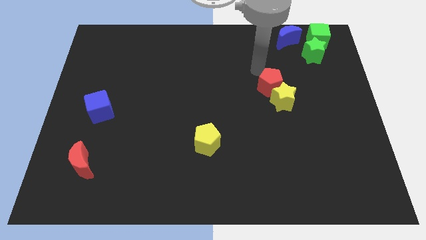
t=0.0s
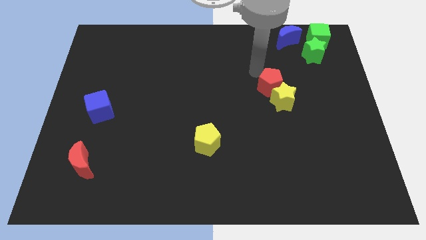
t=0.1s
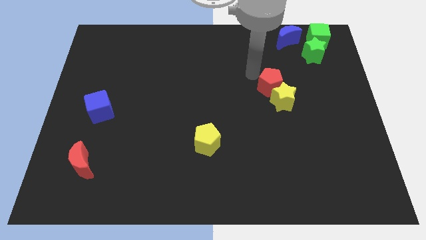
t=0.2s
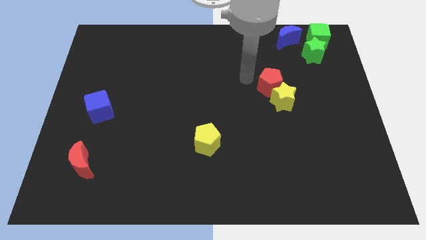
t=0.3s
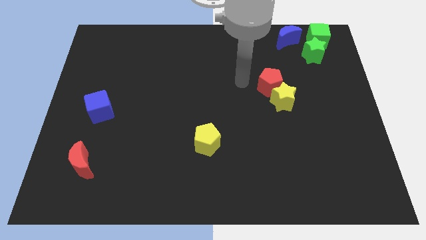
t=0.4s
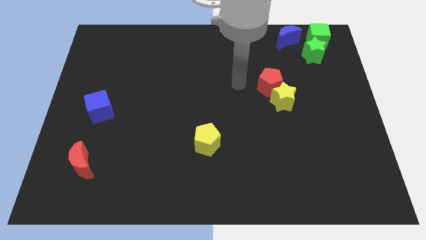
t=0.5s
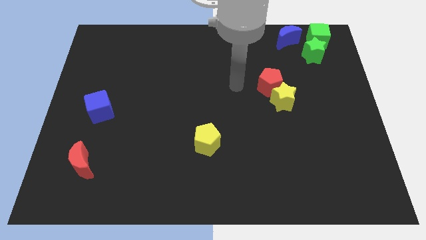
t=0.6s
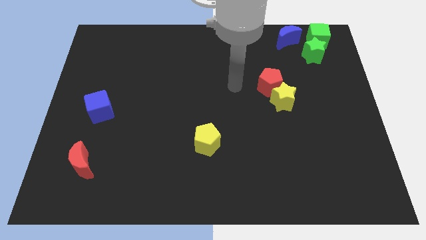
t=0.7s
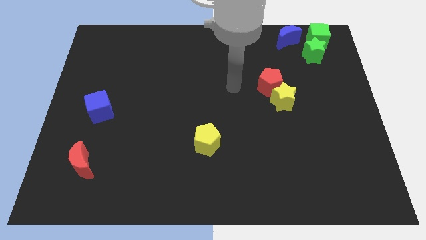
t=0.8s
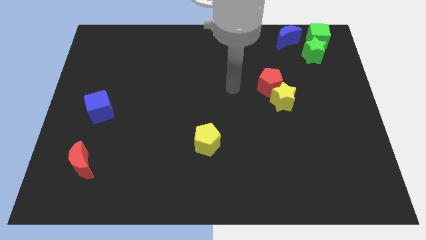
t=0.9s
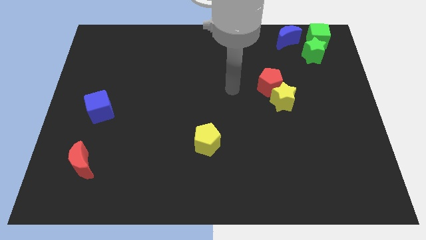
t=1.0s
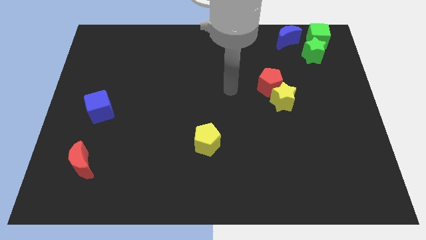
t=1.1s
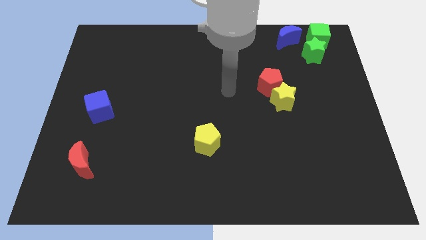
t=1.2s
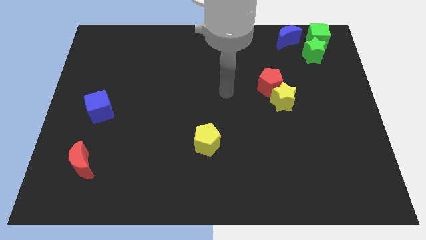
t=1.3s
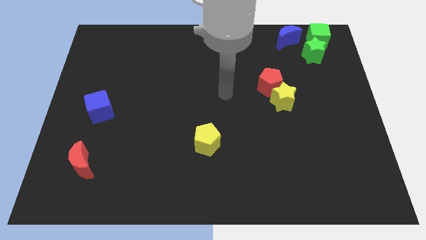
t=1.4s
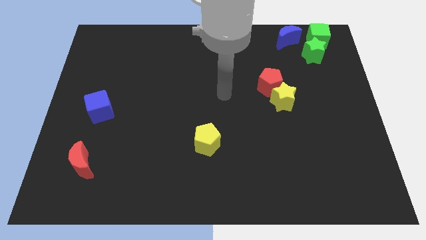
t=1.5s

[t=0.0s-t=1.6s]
place the arm towards the left side of the red pentagon

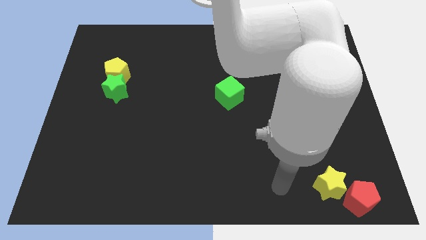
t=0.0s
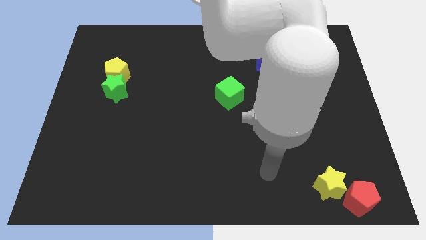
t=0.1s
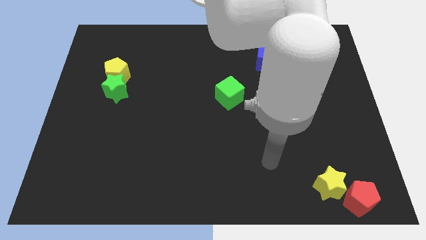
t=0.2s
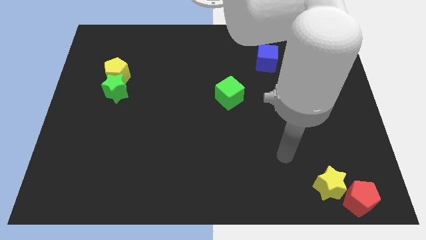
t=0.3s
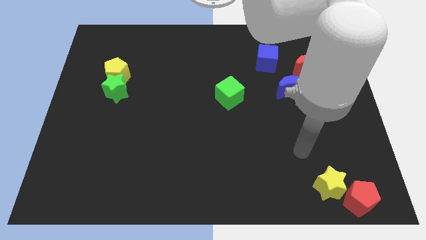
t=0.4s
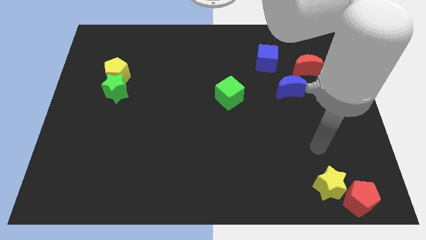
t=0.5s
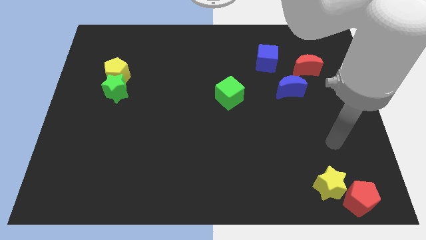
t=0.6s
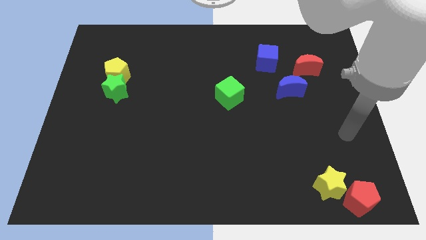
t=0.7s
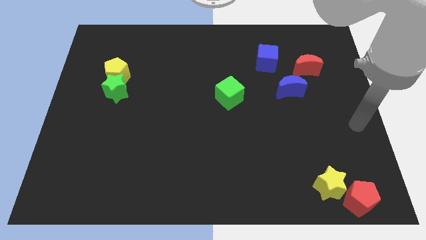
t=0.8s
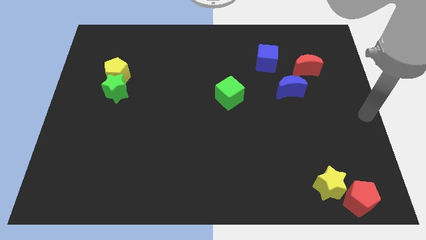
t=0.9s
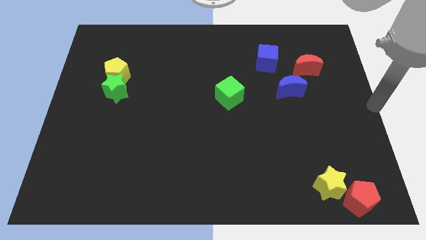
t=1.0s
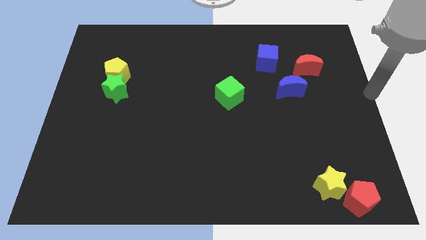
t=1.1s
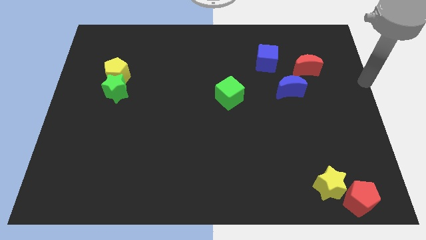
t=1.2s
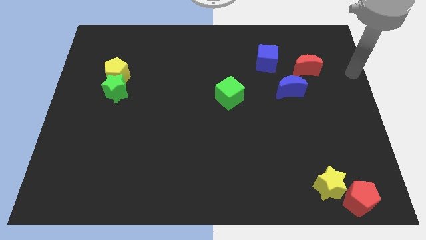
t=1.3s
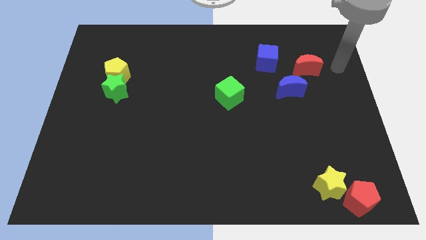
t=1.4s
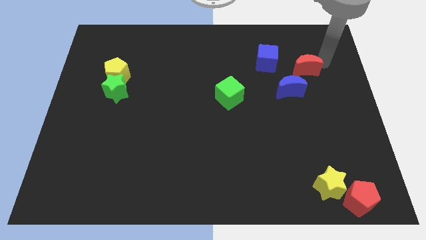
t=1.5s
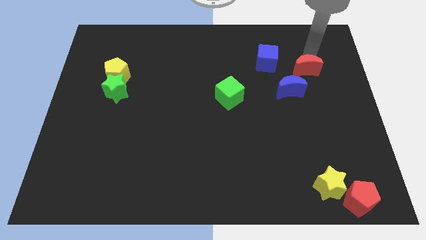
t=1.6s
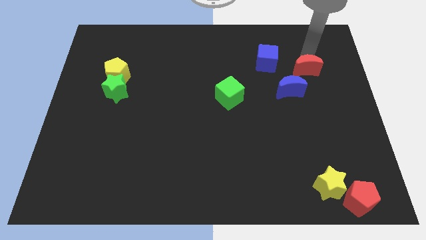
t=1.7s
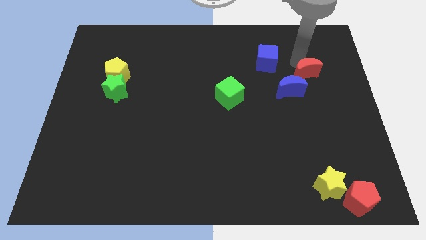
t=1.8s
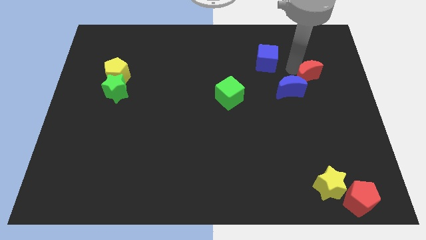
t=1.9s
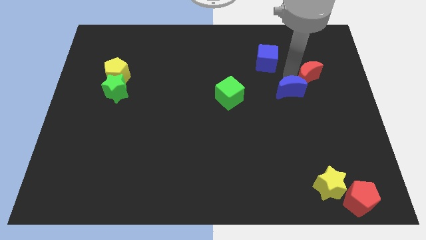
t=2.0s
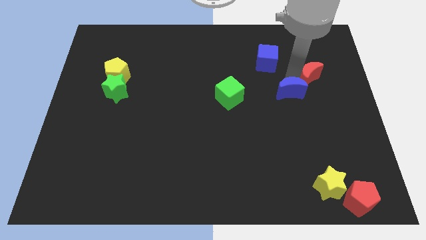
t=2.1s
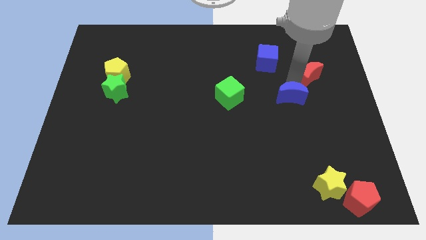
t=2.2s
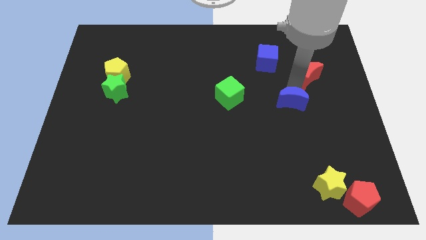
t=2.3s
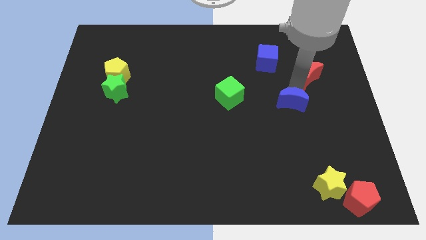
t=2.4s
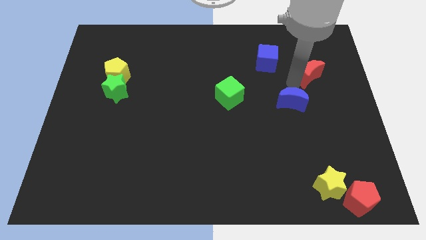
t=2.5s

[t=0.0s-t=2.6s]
push the red and blue moons towards the bottom

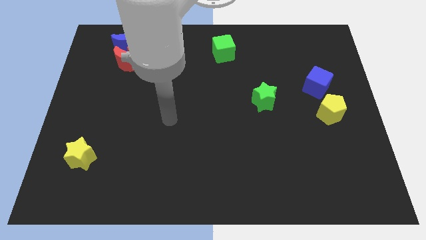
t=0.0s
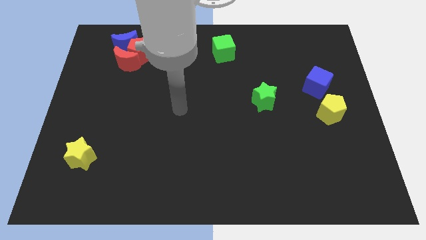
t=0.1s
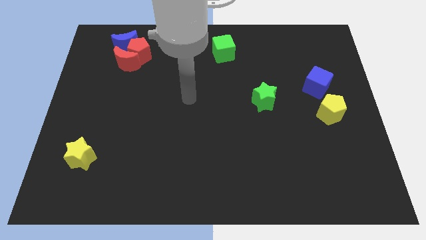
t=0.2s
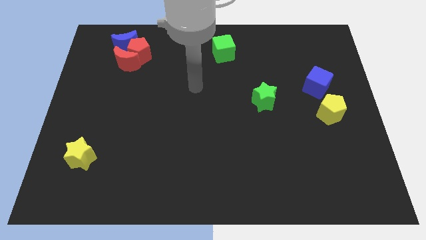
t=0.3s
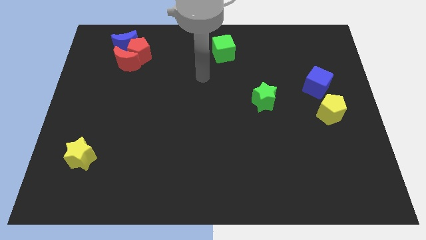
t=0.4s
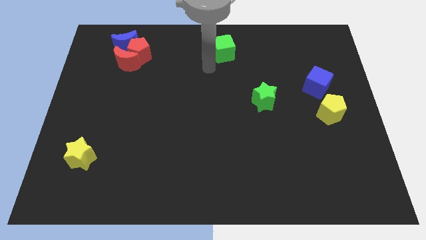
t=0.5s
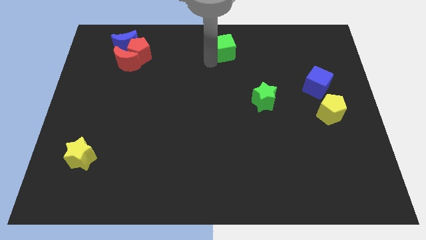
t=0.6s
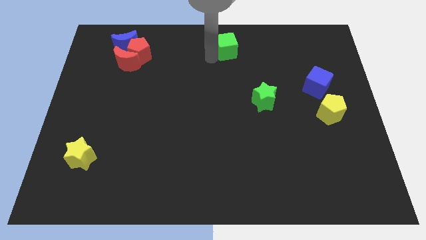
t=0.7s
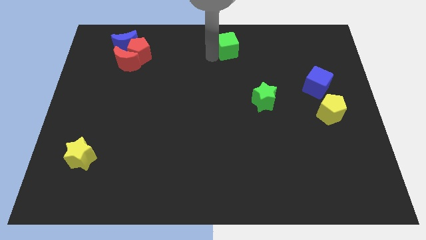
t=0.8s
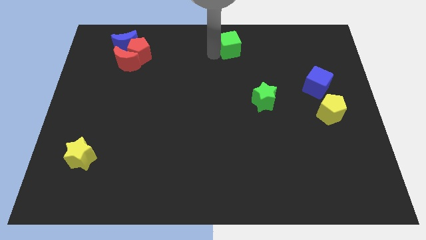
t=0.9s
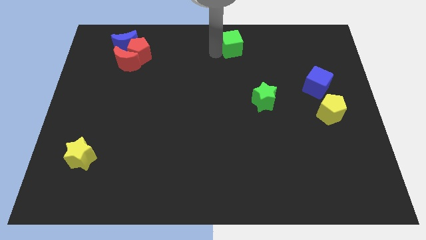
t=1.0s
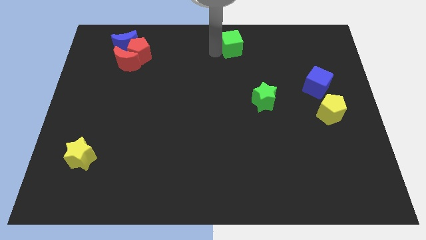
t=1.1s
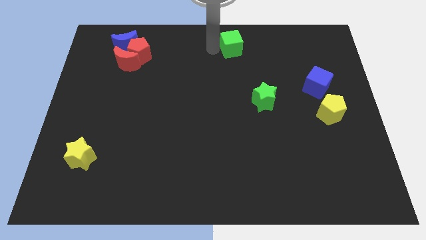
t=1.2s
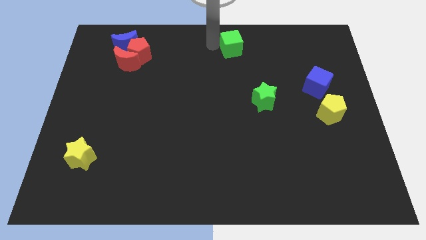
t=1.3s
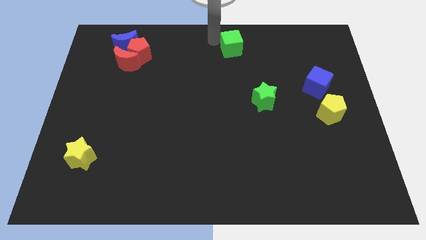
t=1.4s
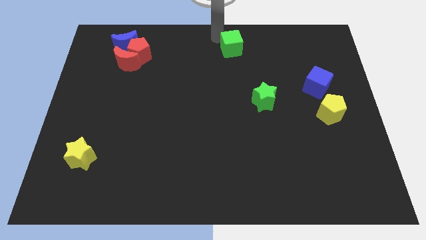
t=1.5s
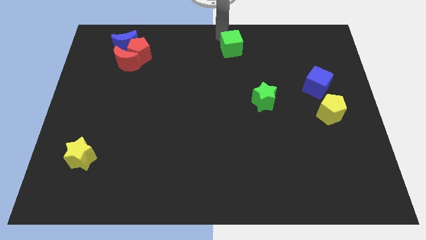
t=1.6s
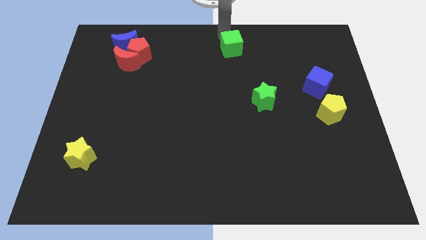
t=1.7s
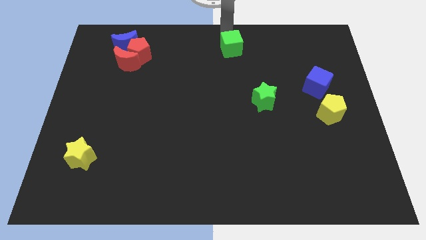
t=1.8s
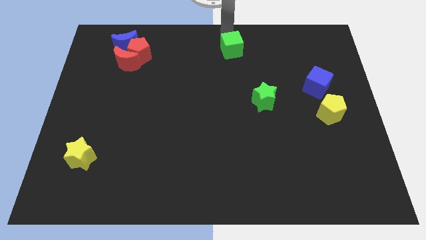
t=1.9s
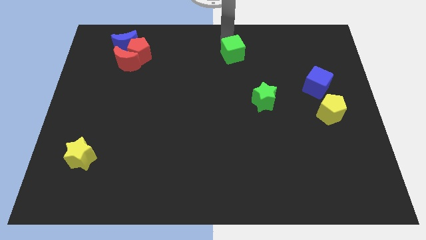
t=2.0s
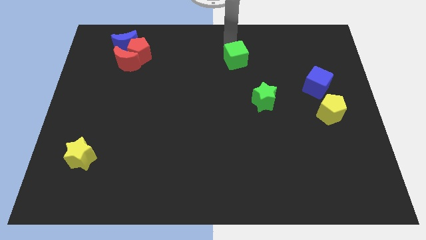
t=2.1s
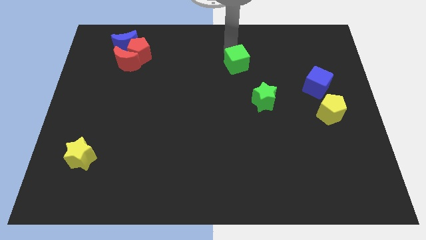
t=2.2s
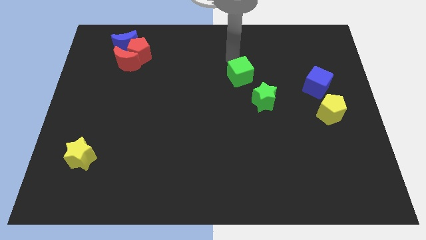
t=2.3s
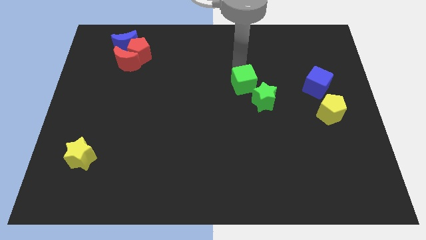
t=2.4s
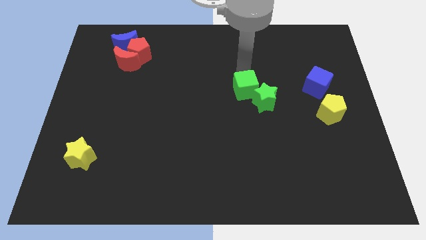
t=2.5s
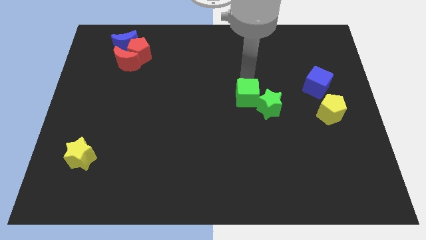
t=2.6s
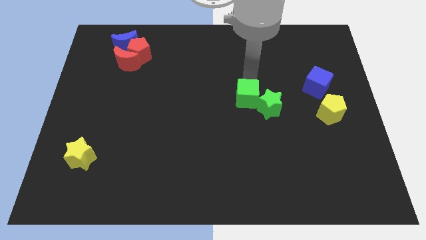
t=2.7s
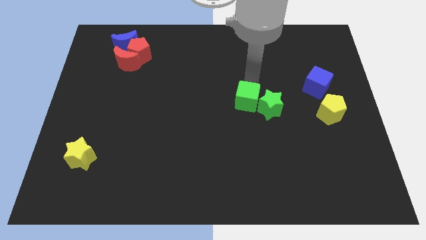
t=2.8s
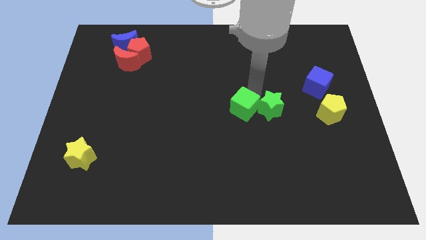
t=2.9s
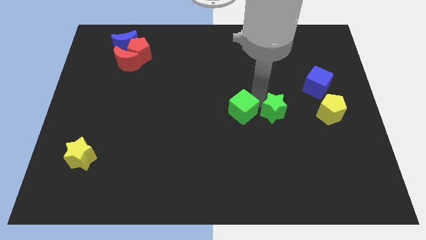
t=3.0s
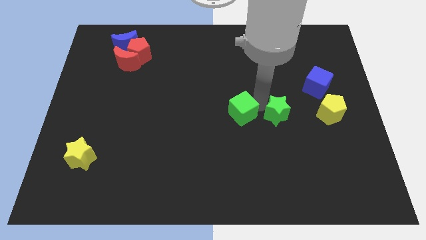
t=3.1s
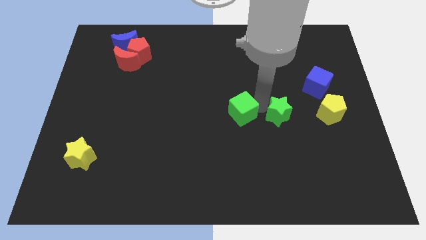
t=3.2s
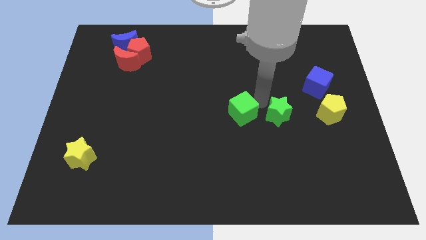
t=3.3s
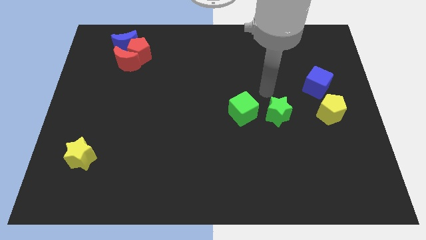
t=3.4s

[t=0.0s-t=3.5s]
place the green cube left to the green star

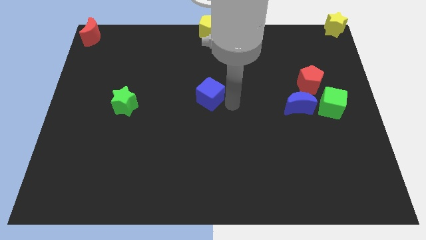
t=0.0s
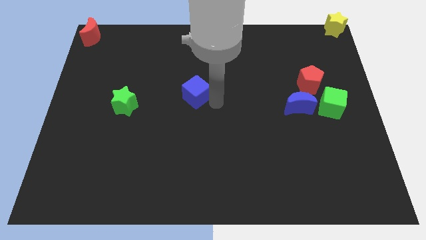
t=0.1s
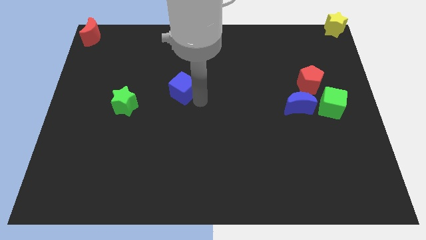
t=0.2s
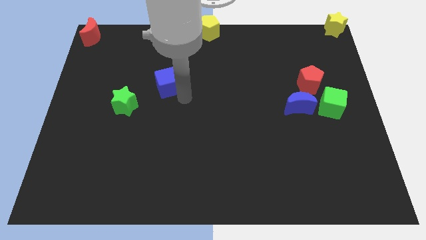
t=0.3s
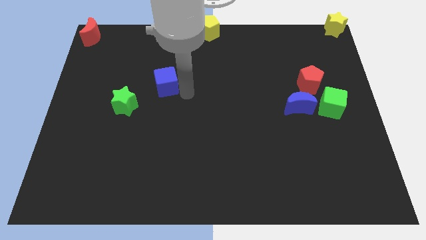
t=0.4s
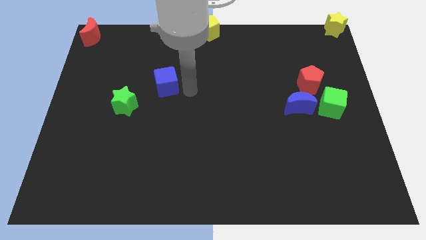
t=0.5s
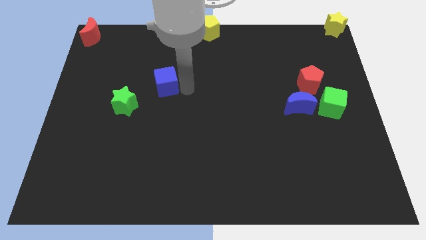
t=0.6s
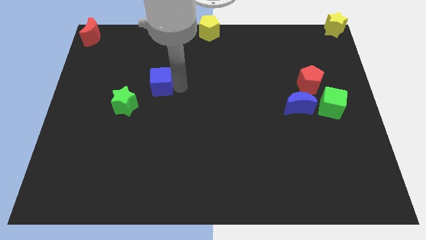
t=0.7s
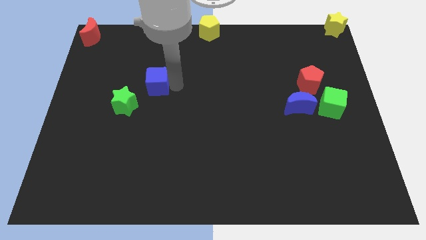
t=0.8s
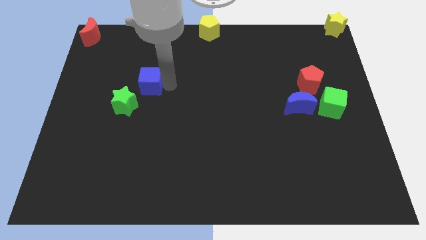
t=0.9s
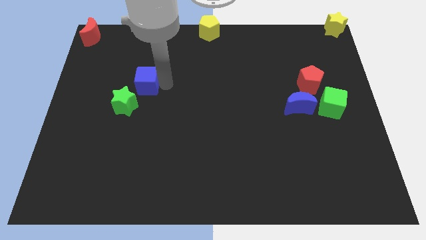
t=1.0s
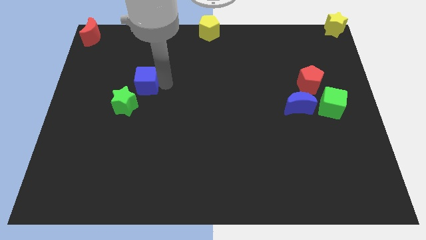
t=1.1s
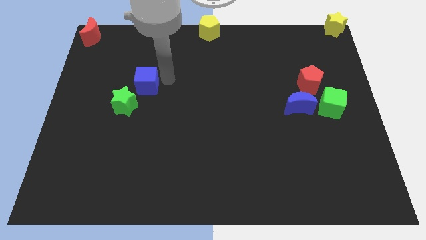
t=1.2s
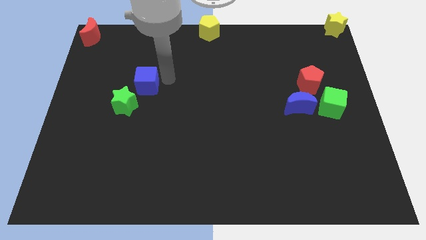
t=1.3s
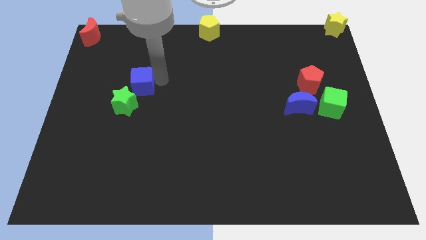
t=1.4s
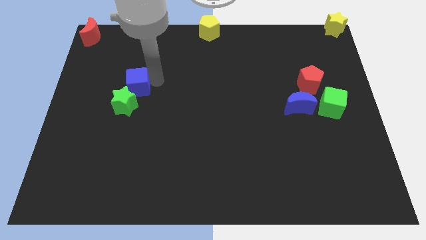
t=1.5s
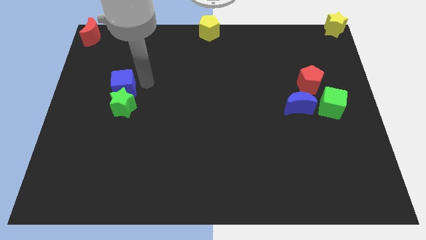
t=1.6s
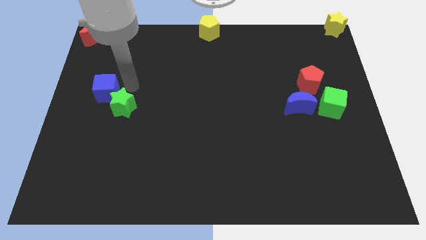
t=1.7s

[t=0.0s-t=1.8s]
move the blue cube into the top side of the green star
